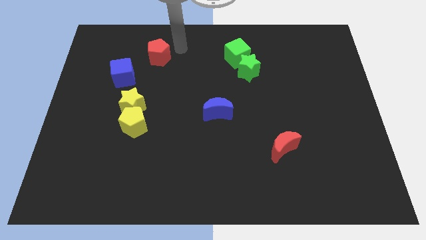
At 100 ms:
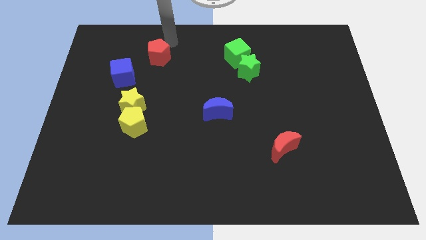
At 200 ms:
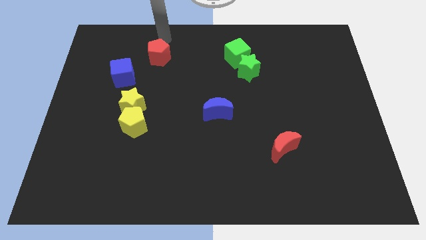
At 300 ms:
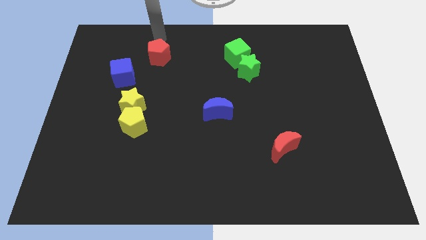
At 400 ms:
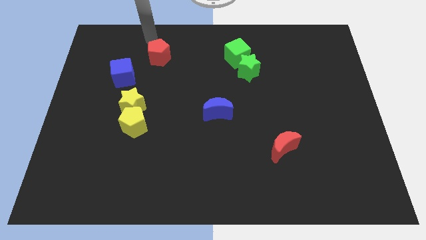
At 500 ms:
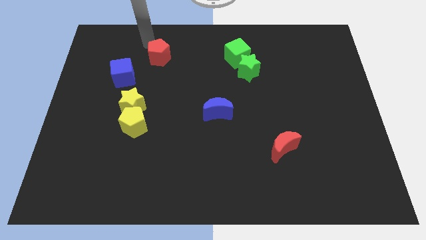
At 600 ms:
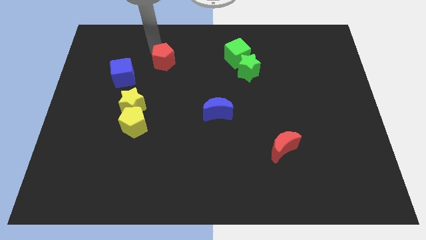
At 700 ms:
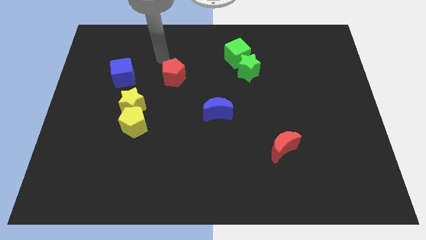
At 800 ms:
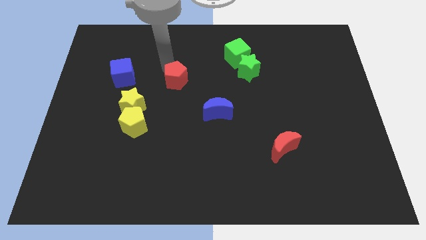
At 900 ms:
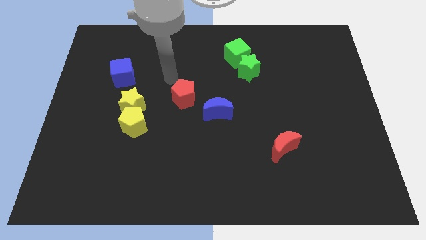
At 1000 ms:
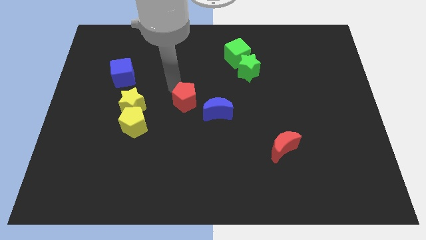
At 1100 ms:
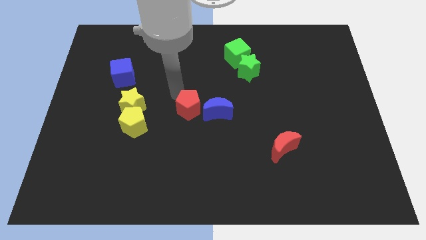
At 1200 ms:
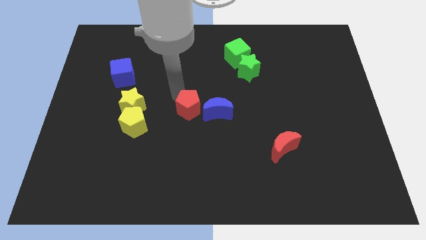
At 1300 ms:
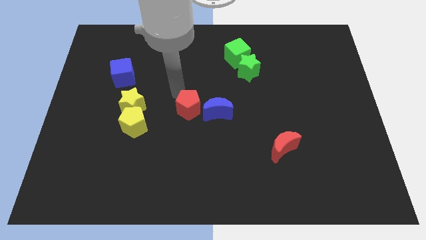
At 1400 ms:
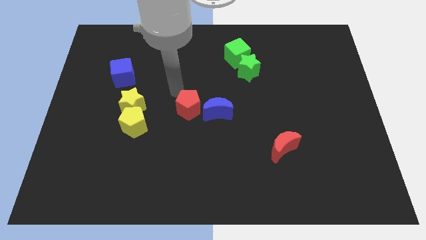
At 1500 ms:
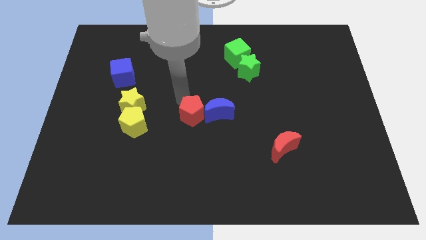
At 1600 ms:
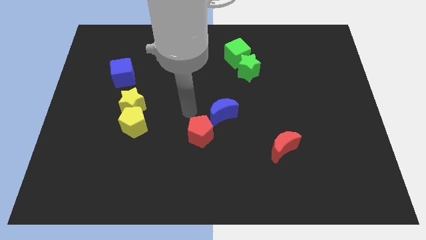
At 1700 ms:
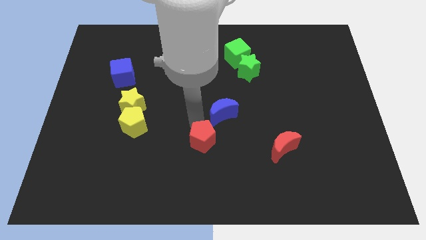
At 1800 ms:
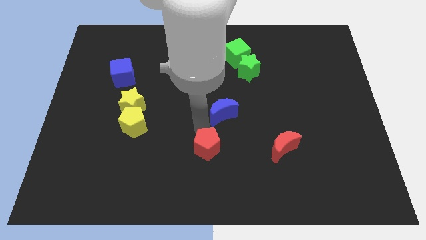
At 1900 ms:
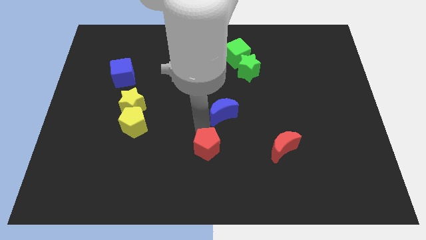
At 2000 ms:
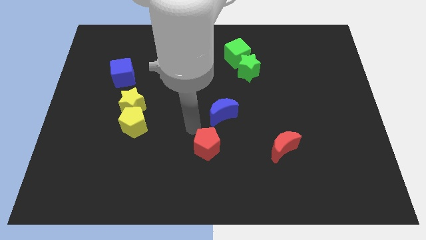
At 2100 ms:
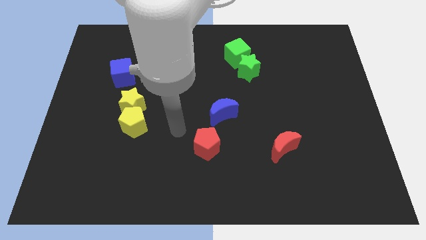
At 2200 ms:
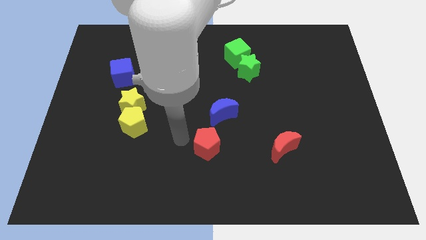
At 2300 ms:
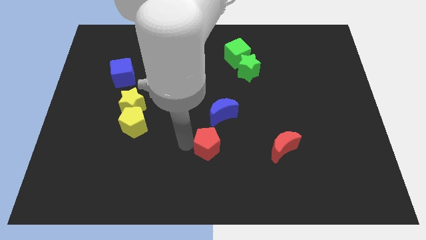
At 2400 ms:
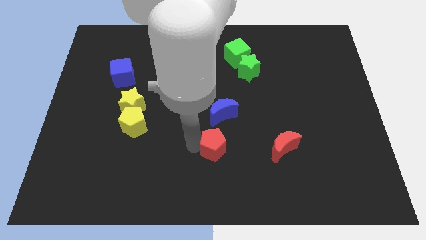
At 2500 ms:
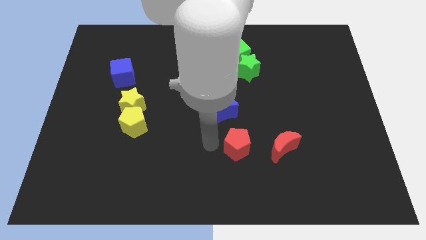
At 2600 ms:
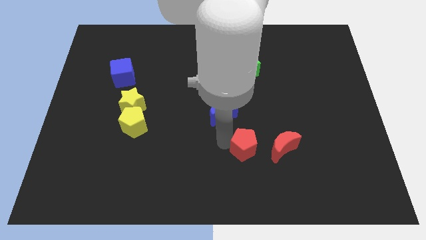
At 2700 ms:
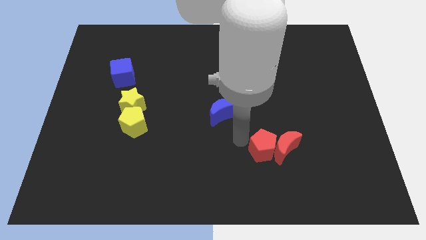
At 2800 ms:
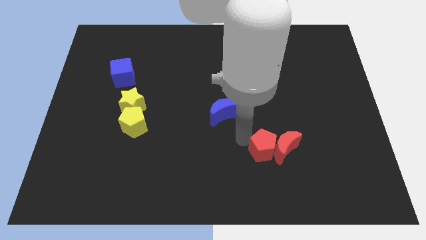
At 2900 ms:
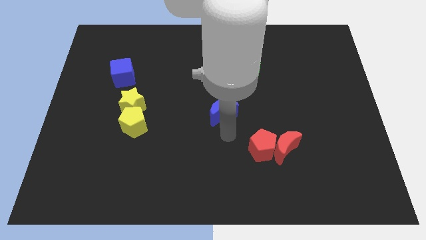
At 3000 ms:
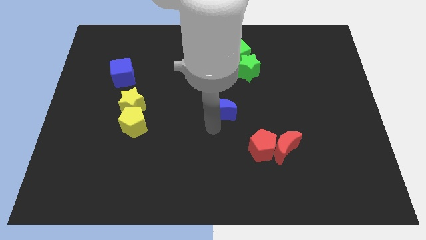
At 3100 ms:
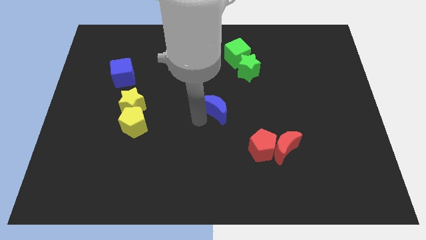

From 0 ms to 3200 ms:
push the red pentagon into the red moon

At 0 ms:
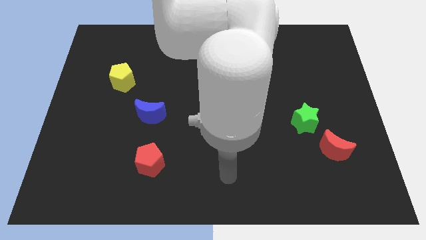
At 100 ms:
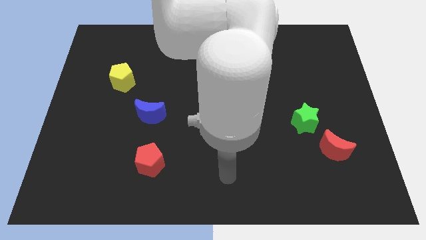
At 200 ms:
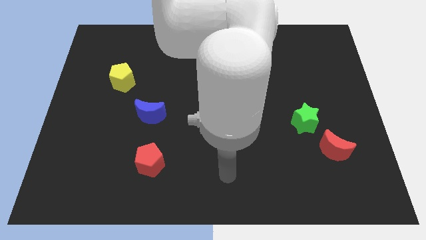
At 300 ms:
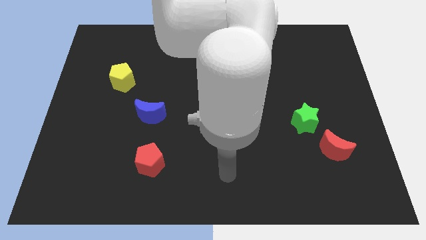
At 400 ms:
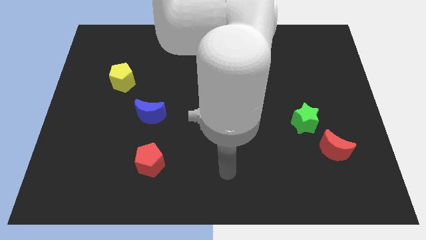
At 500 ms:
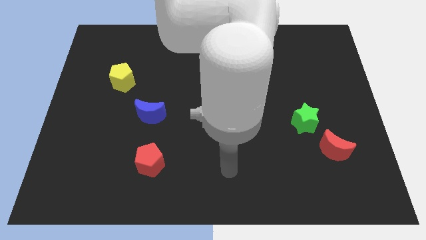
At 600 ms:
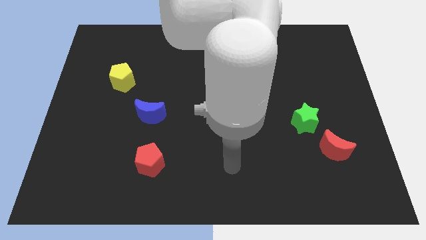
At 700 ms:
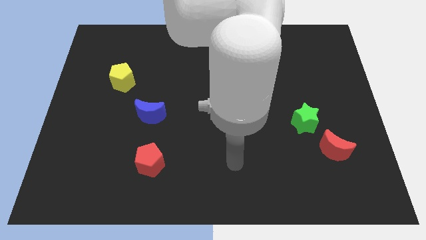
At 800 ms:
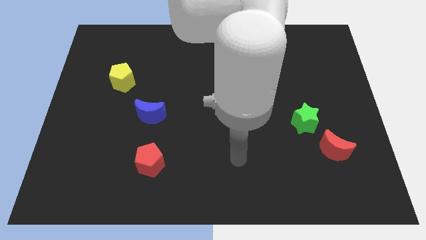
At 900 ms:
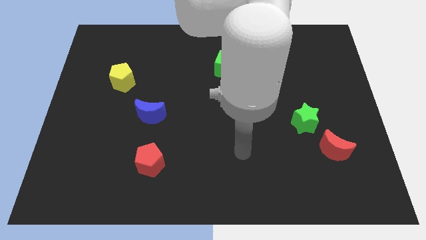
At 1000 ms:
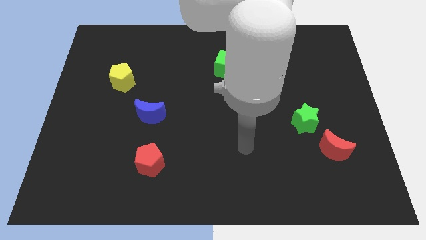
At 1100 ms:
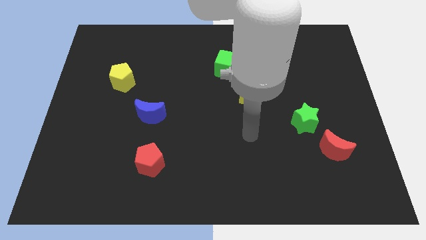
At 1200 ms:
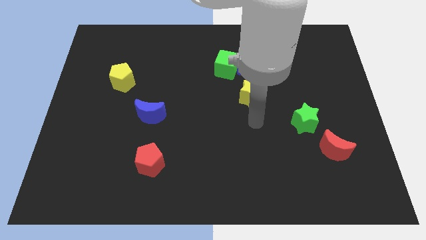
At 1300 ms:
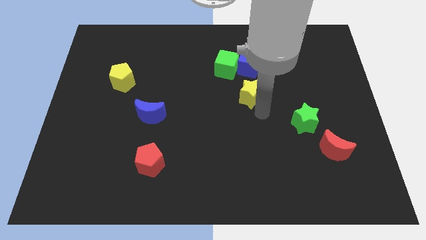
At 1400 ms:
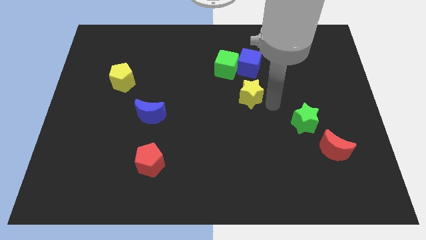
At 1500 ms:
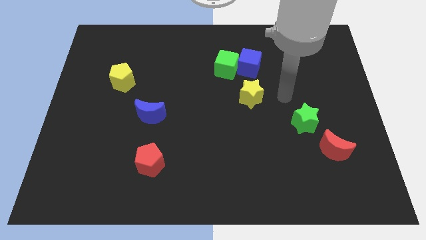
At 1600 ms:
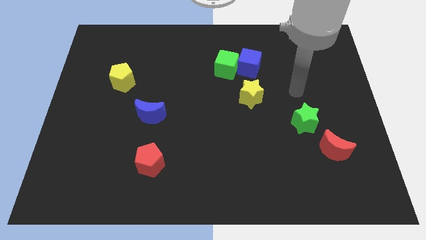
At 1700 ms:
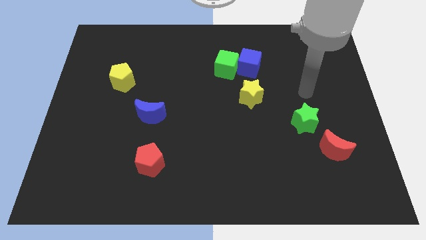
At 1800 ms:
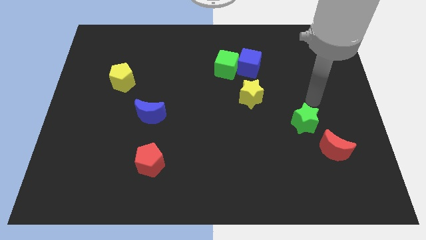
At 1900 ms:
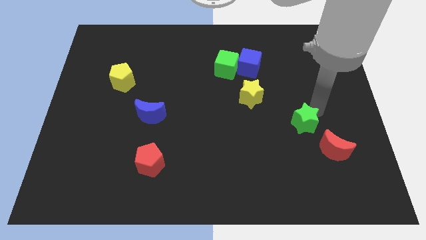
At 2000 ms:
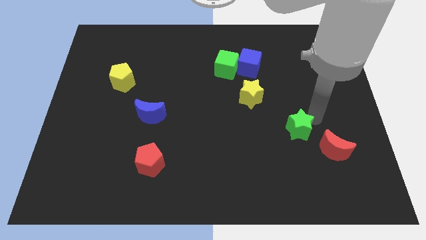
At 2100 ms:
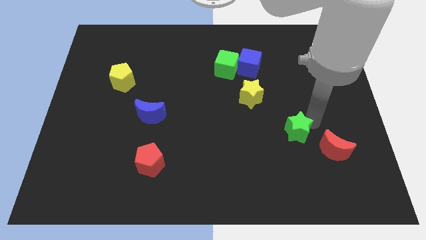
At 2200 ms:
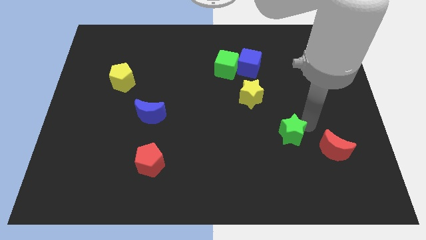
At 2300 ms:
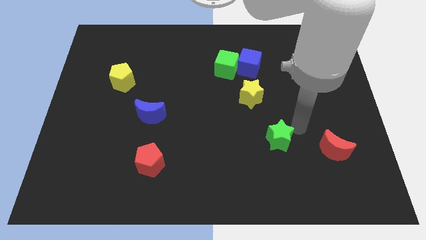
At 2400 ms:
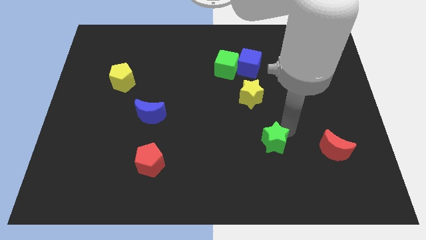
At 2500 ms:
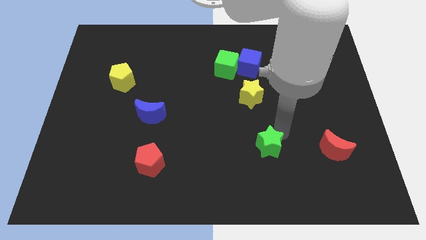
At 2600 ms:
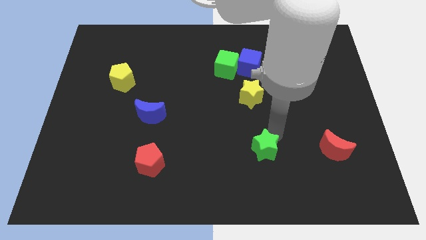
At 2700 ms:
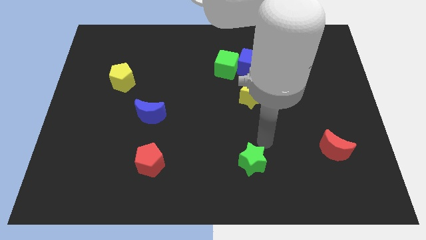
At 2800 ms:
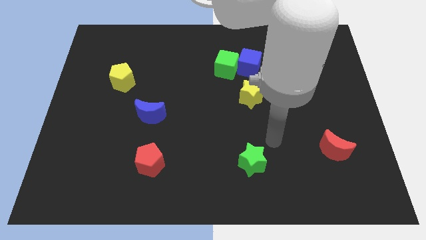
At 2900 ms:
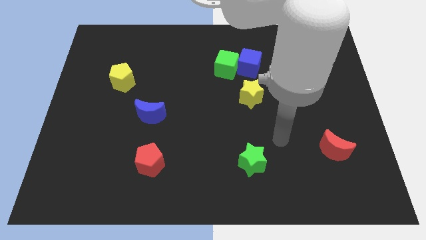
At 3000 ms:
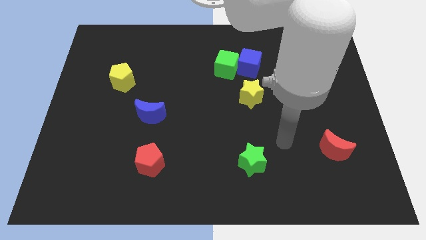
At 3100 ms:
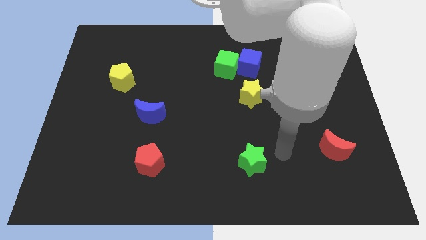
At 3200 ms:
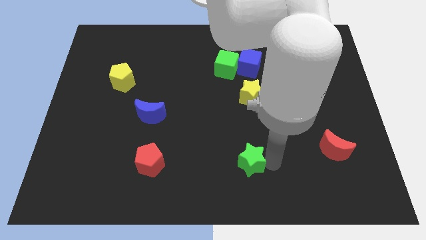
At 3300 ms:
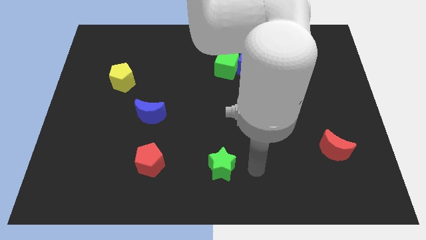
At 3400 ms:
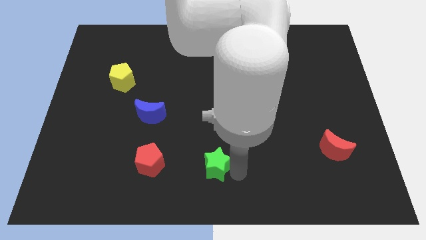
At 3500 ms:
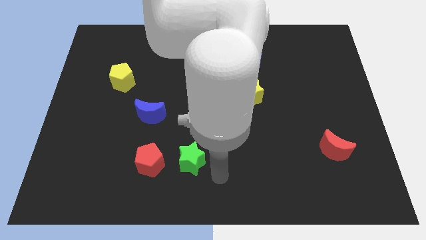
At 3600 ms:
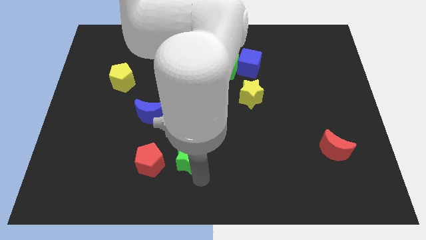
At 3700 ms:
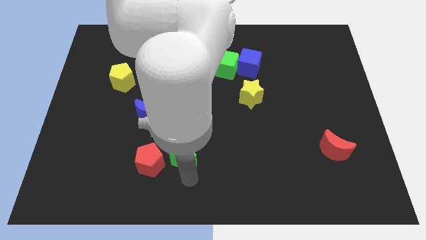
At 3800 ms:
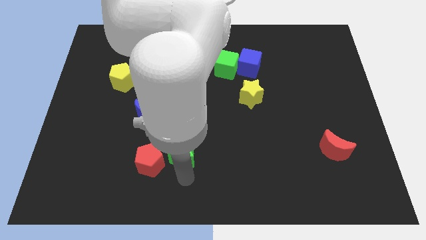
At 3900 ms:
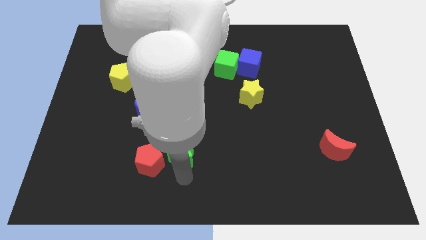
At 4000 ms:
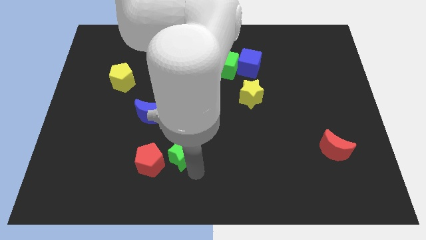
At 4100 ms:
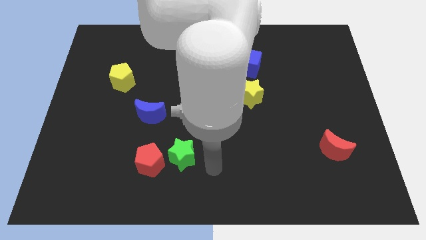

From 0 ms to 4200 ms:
push the green star towards the right side of the red pentagon

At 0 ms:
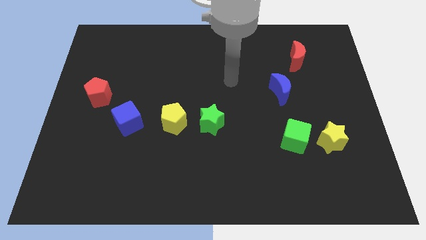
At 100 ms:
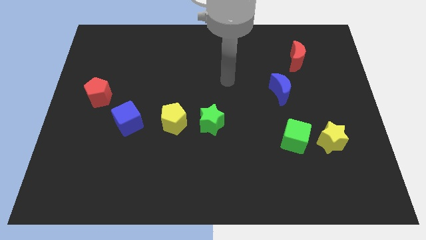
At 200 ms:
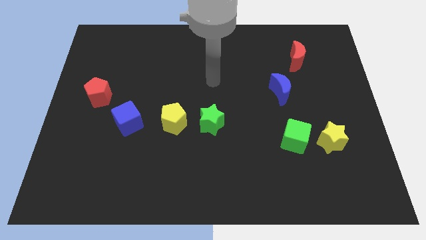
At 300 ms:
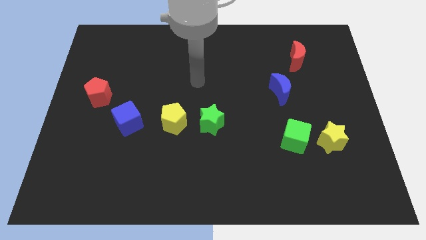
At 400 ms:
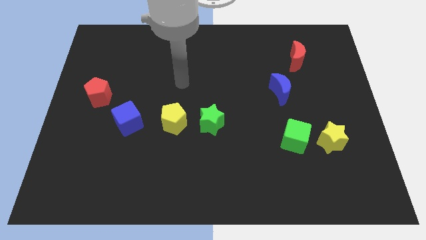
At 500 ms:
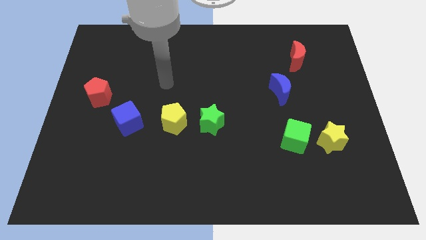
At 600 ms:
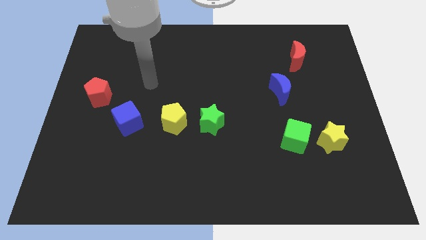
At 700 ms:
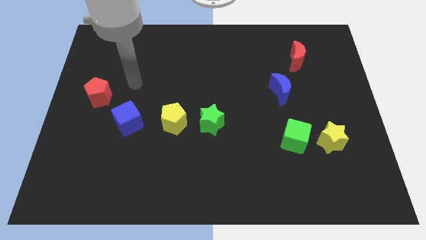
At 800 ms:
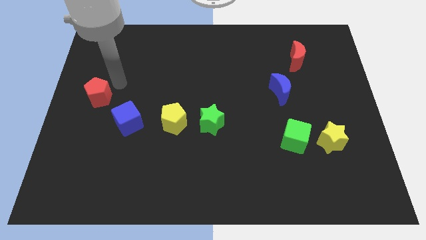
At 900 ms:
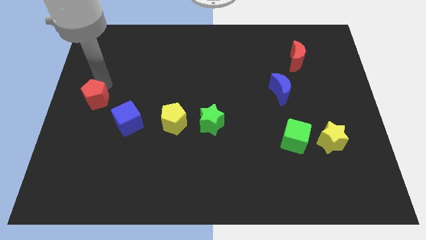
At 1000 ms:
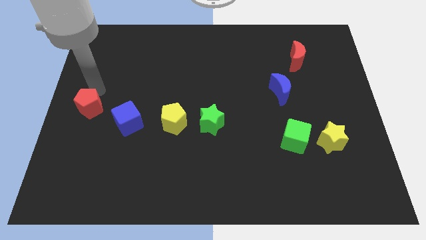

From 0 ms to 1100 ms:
push the red pentagon slightly towards the left side of the blue cube

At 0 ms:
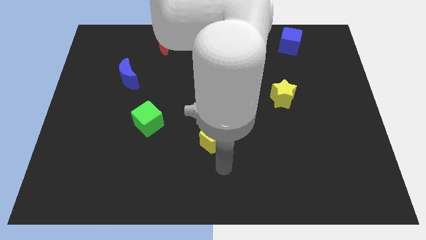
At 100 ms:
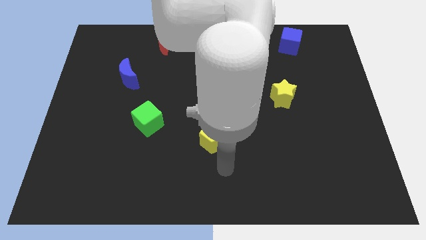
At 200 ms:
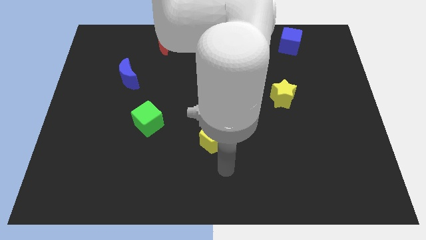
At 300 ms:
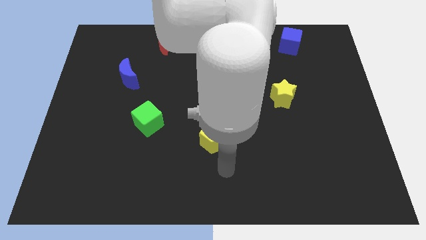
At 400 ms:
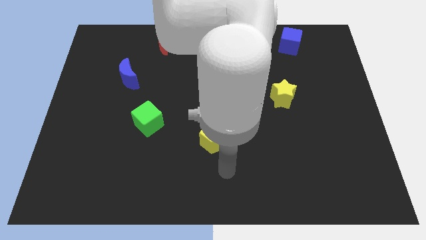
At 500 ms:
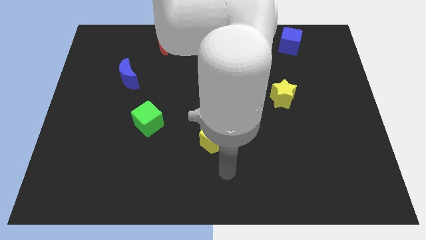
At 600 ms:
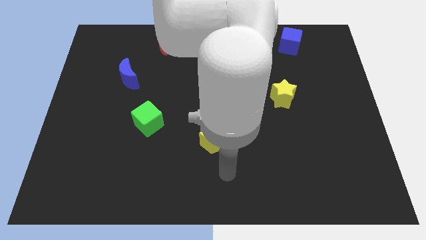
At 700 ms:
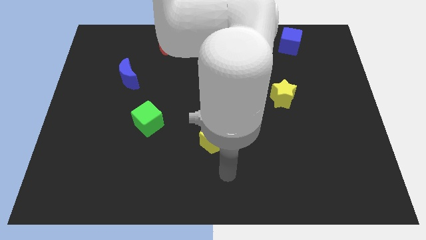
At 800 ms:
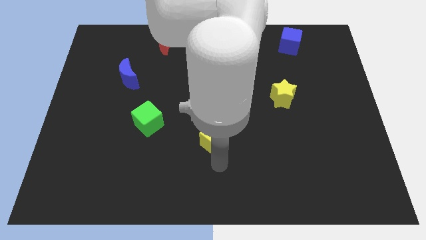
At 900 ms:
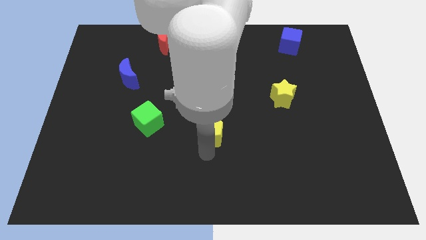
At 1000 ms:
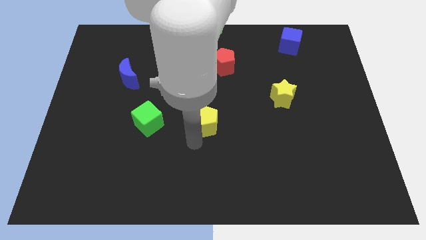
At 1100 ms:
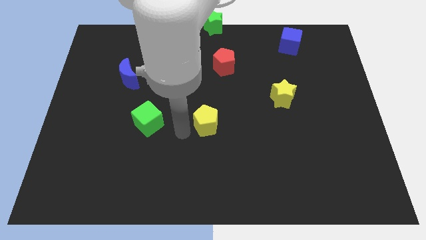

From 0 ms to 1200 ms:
put the yellow pentagon parallel right to the green cube
